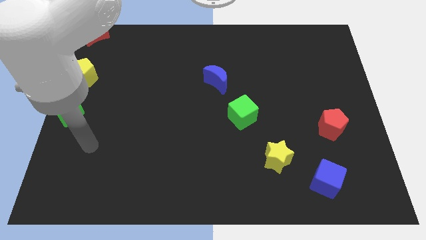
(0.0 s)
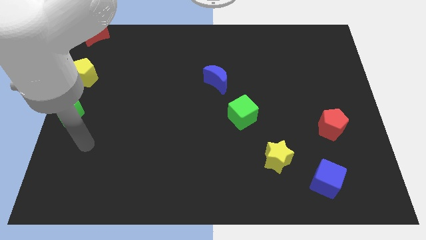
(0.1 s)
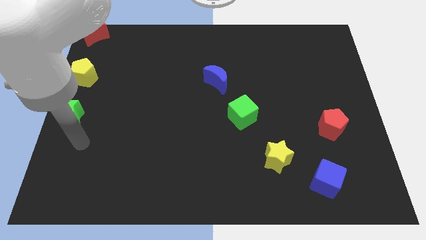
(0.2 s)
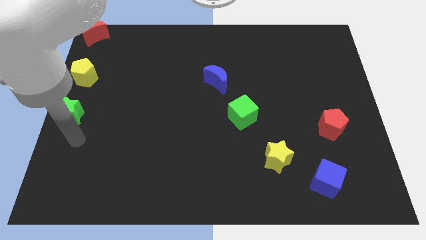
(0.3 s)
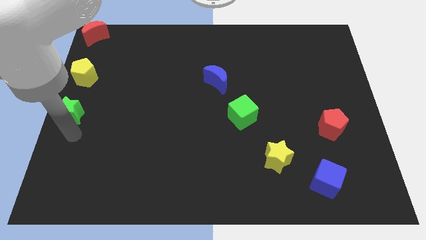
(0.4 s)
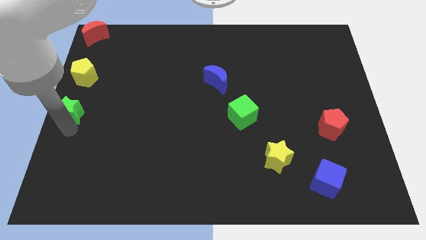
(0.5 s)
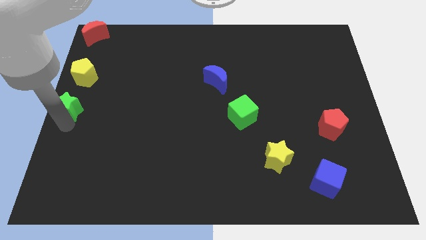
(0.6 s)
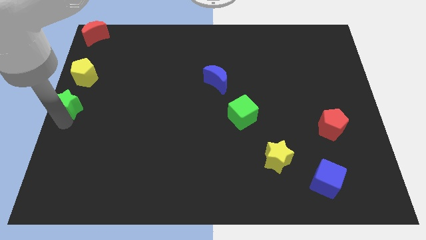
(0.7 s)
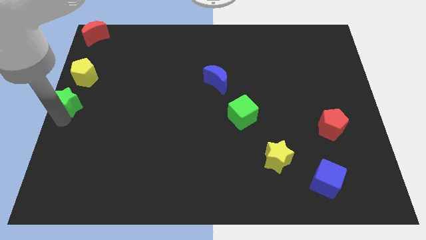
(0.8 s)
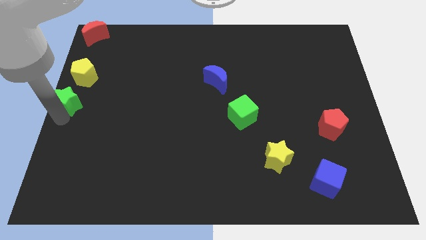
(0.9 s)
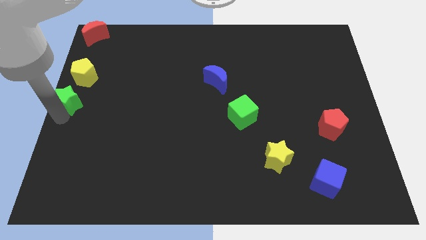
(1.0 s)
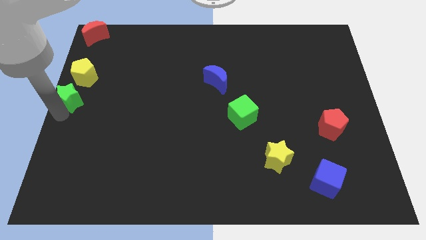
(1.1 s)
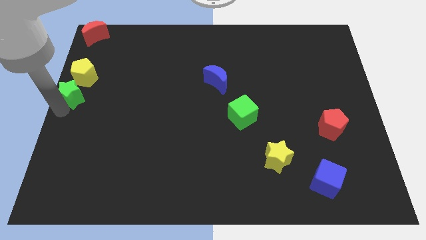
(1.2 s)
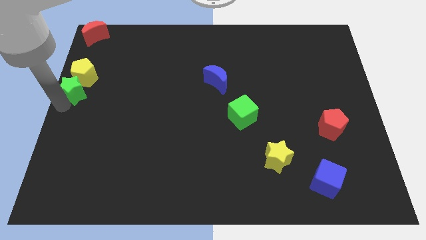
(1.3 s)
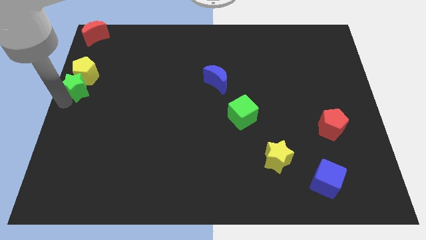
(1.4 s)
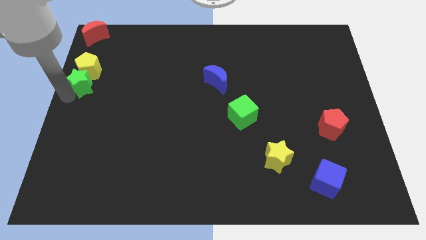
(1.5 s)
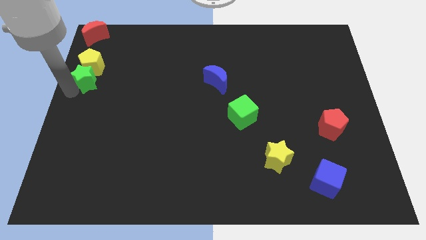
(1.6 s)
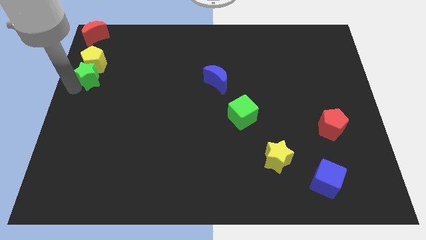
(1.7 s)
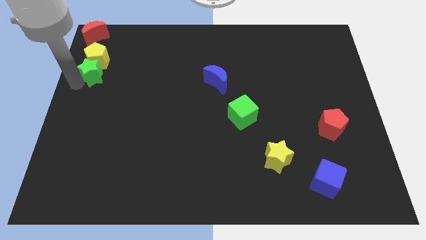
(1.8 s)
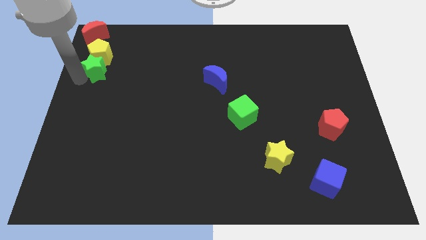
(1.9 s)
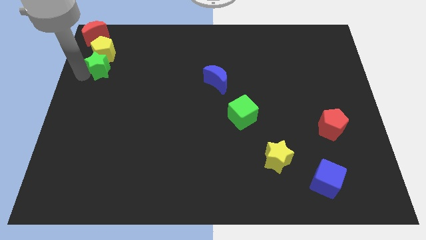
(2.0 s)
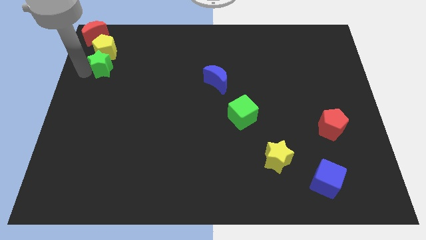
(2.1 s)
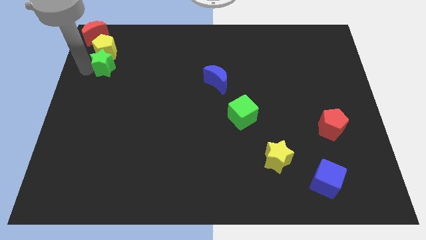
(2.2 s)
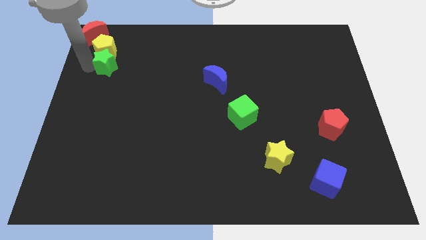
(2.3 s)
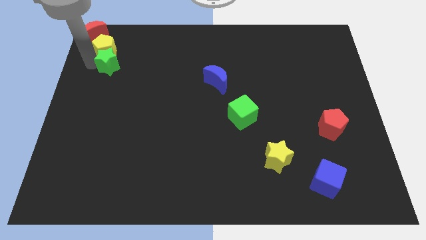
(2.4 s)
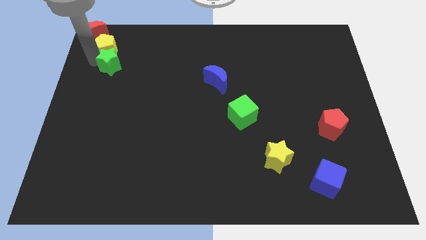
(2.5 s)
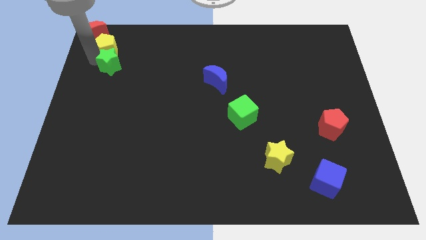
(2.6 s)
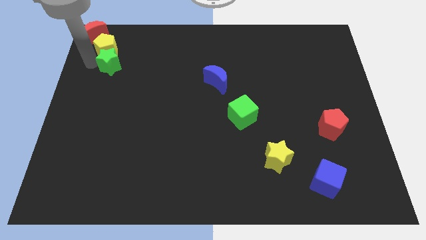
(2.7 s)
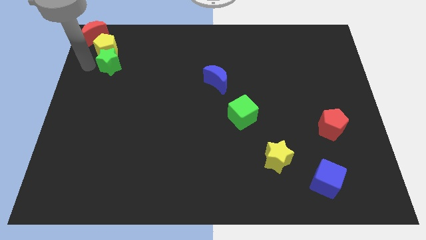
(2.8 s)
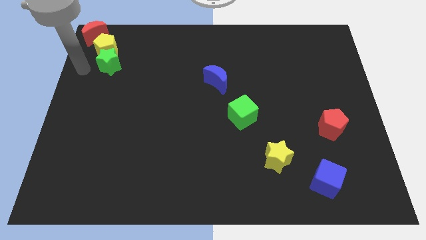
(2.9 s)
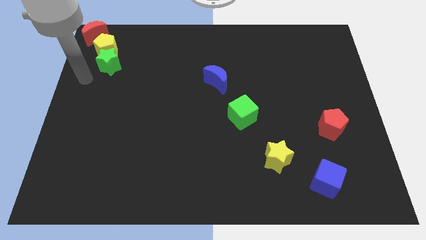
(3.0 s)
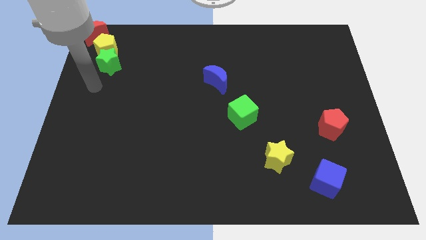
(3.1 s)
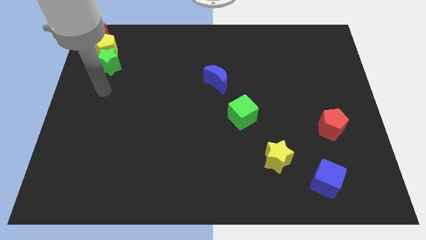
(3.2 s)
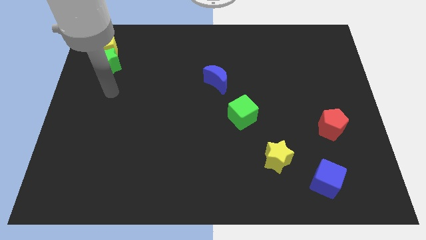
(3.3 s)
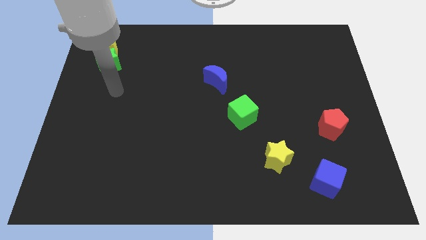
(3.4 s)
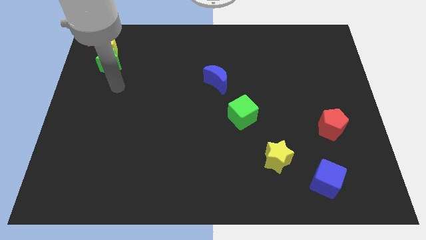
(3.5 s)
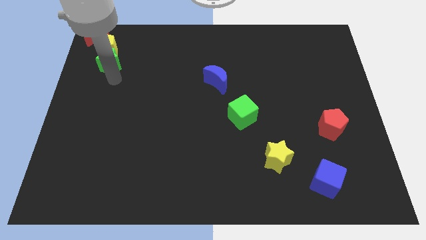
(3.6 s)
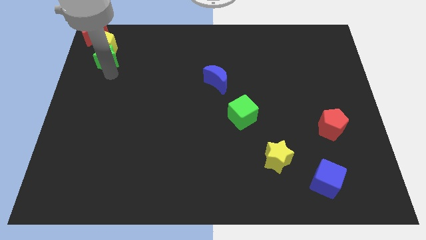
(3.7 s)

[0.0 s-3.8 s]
move green star and yellow pentagon into red moon

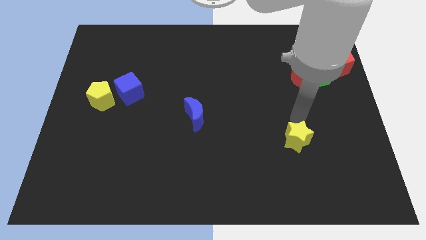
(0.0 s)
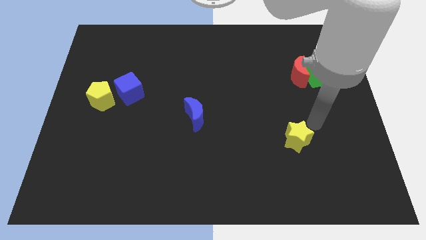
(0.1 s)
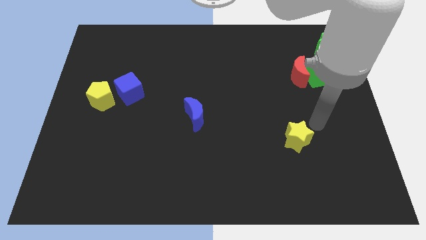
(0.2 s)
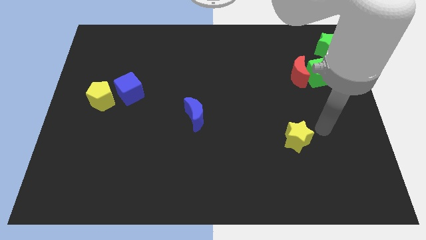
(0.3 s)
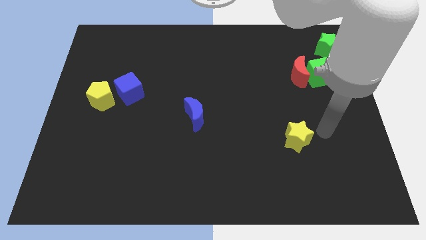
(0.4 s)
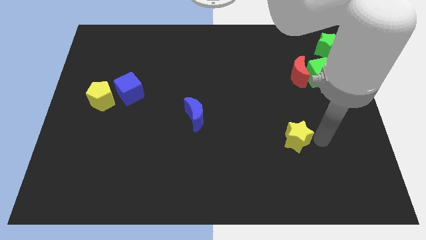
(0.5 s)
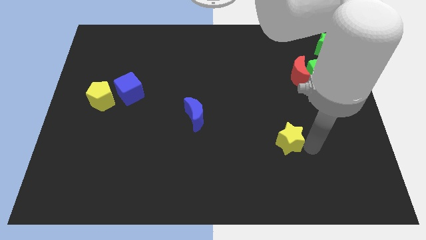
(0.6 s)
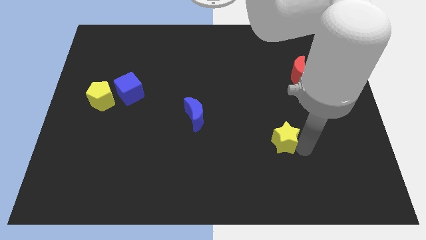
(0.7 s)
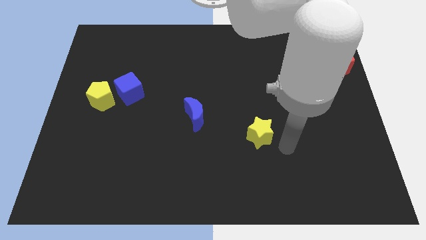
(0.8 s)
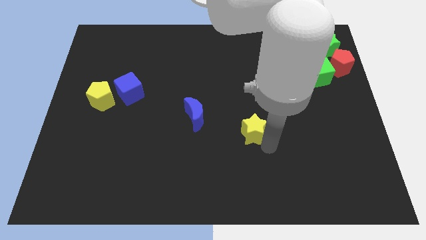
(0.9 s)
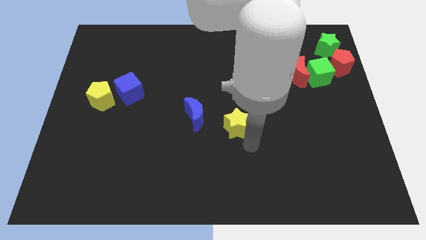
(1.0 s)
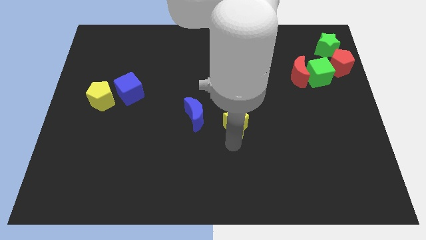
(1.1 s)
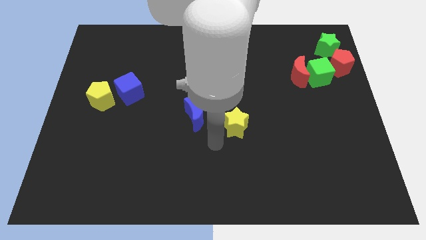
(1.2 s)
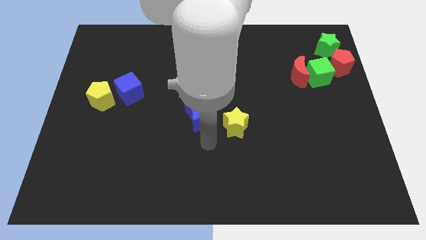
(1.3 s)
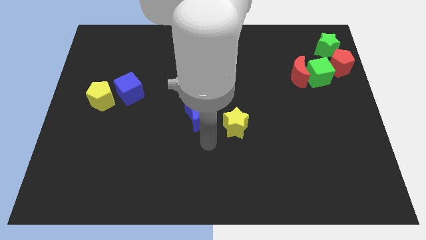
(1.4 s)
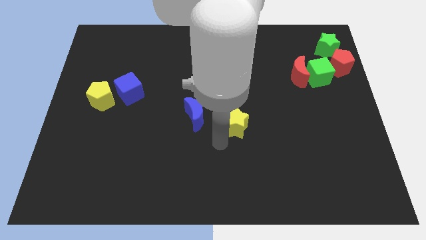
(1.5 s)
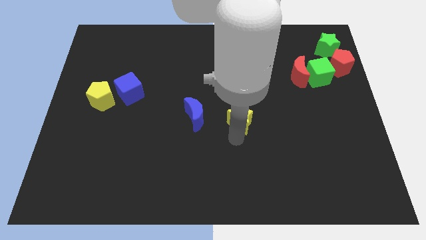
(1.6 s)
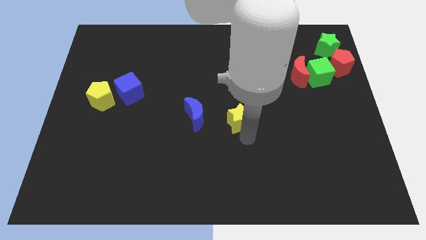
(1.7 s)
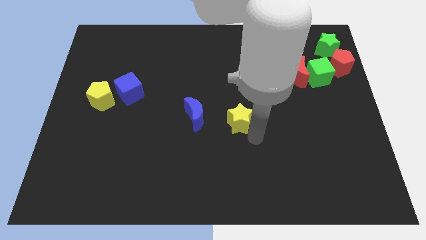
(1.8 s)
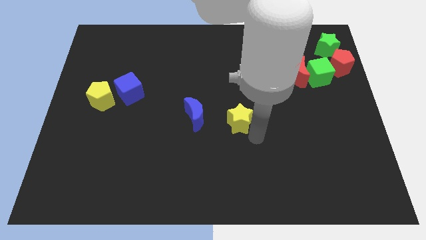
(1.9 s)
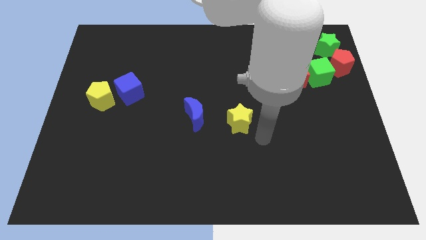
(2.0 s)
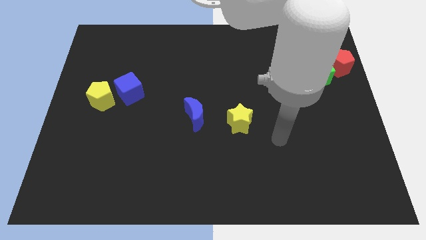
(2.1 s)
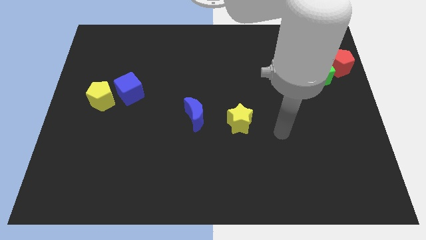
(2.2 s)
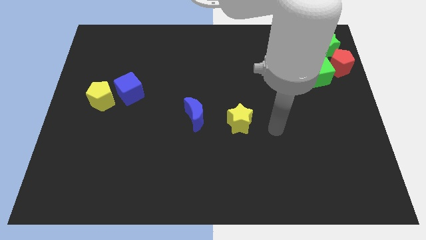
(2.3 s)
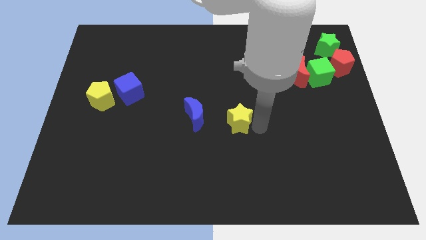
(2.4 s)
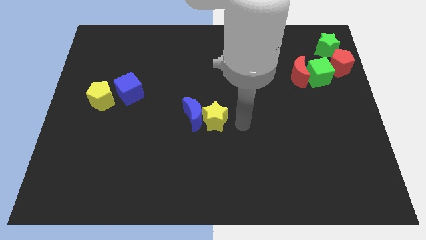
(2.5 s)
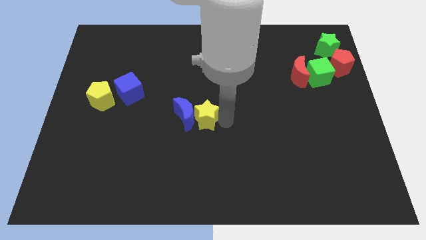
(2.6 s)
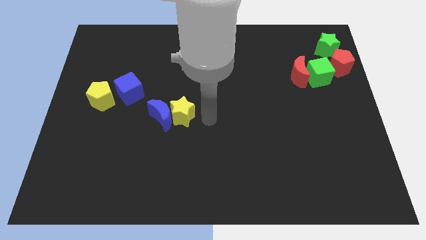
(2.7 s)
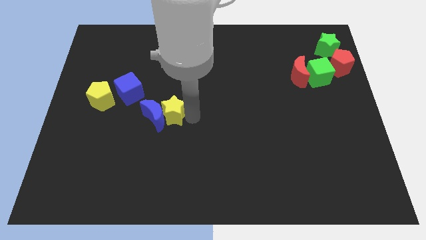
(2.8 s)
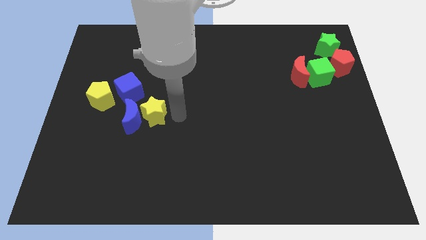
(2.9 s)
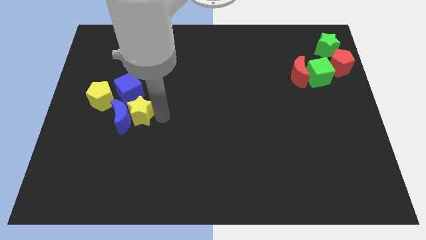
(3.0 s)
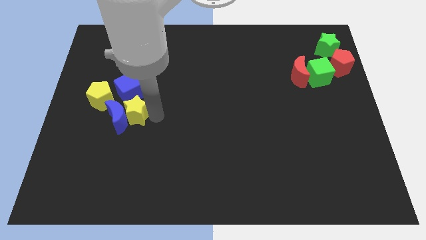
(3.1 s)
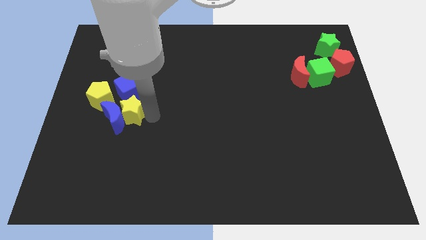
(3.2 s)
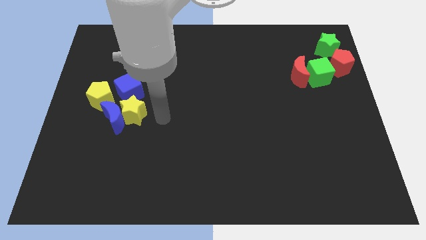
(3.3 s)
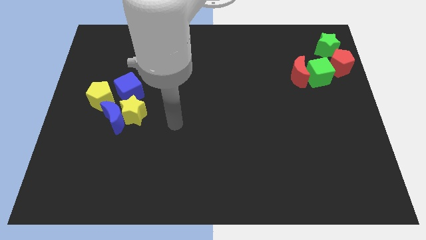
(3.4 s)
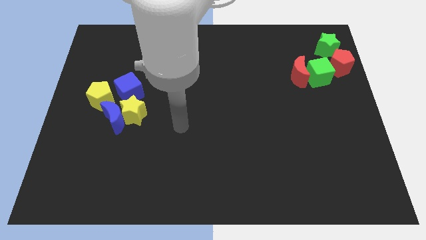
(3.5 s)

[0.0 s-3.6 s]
move yellow star along with blue crescent towards the yellow pentagon

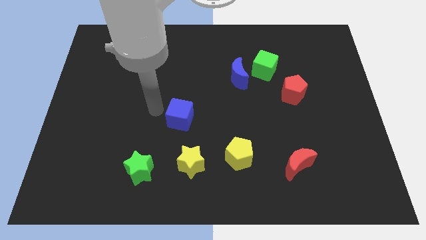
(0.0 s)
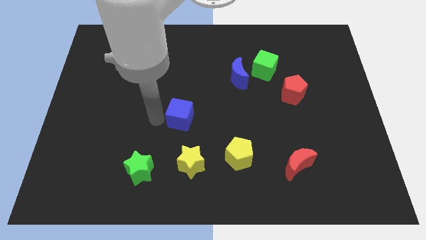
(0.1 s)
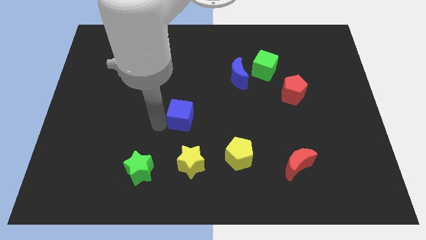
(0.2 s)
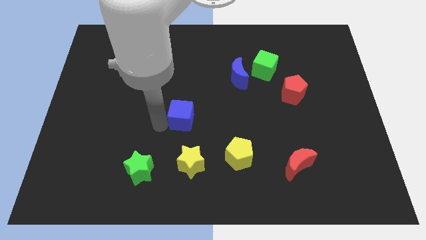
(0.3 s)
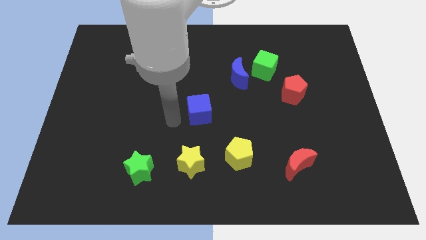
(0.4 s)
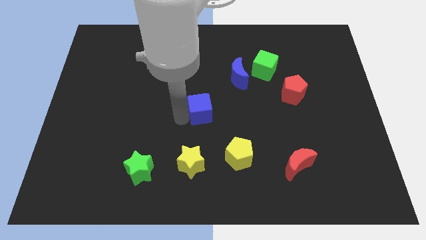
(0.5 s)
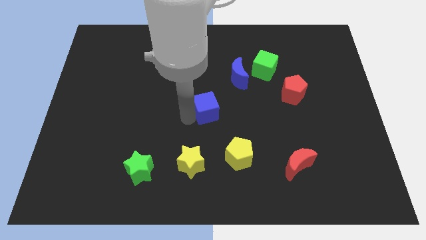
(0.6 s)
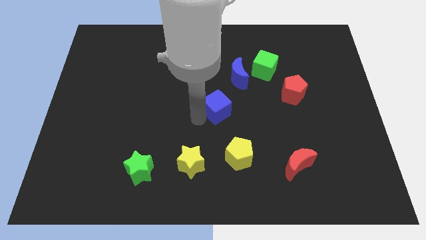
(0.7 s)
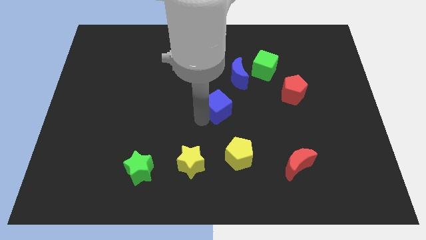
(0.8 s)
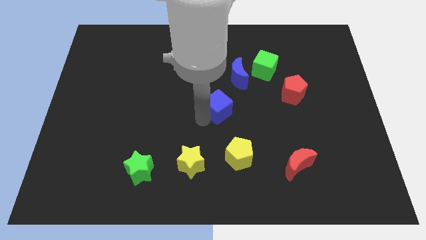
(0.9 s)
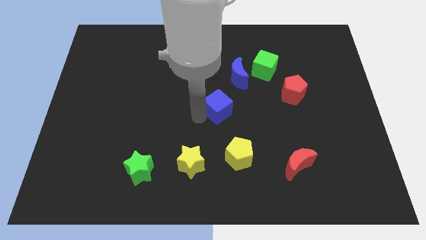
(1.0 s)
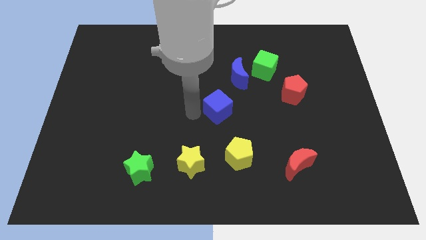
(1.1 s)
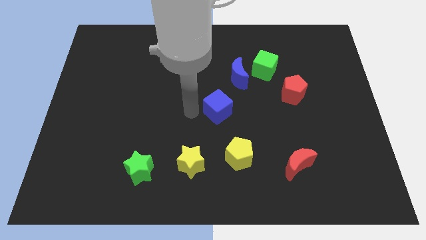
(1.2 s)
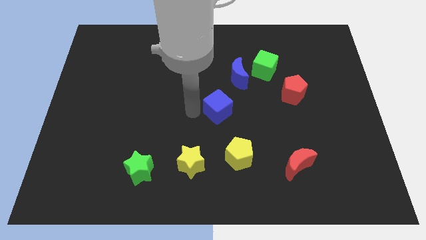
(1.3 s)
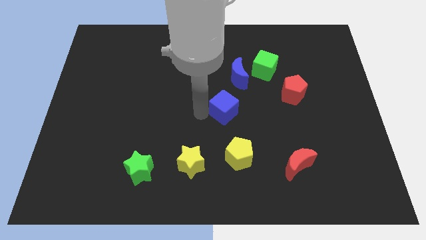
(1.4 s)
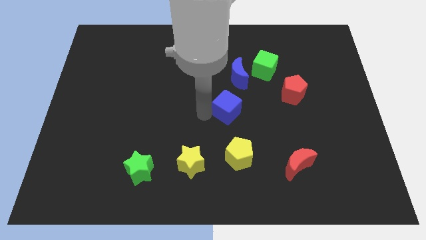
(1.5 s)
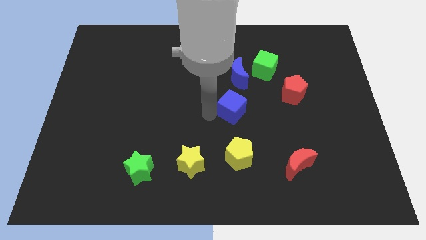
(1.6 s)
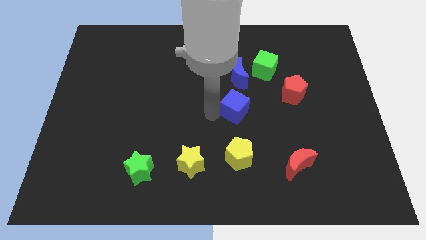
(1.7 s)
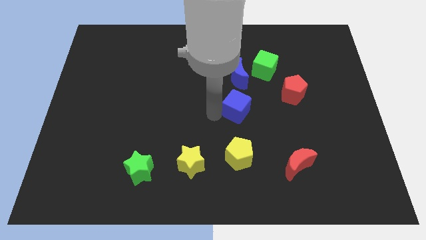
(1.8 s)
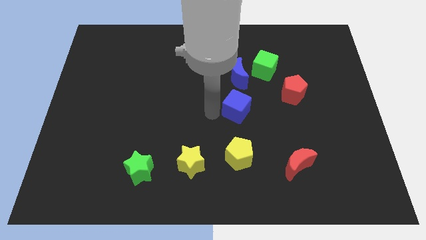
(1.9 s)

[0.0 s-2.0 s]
push the blue block on top of the yellow pentagon
